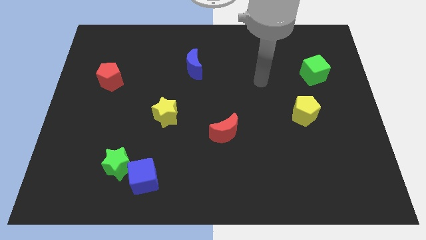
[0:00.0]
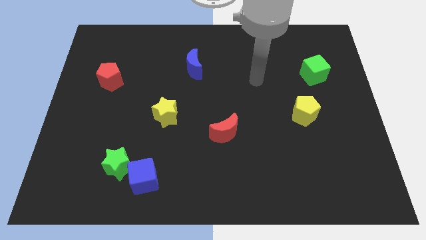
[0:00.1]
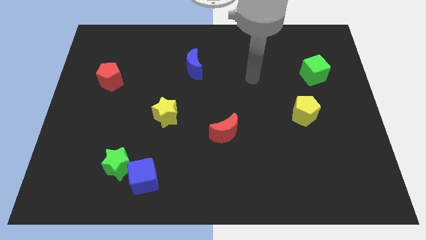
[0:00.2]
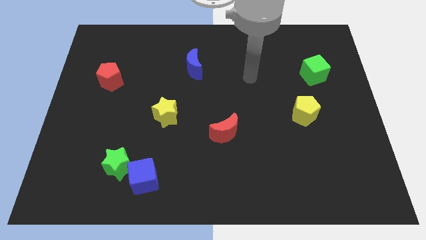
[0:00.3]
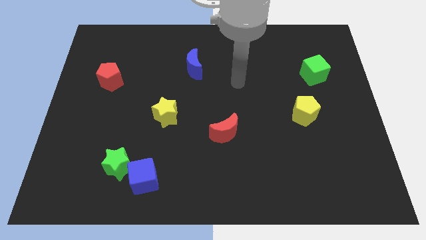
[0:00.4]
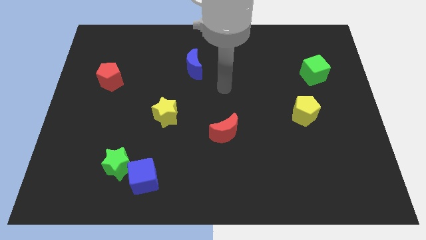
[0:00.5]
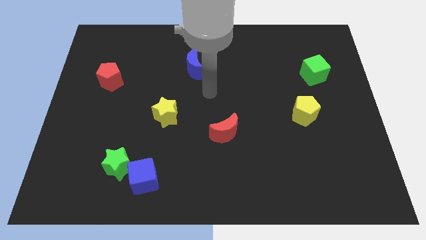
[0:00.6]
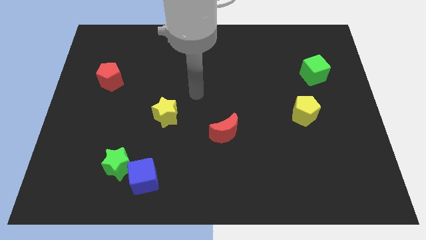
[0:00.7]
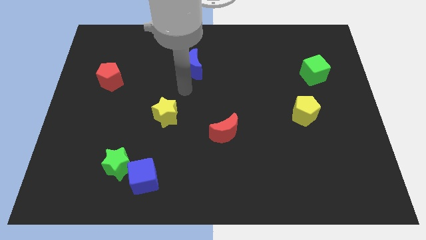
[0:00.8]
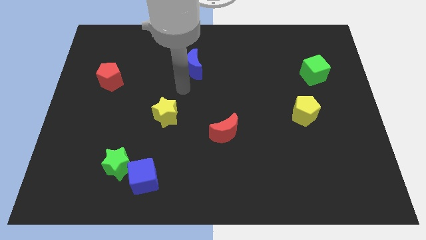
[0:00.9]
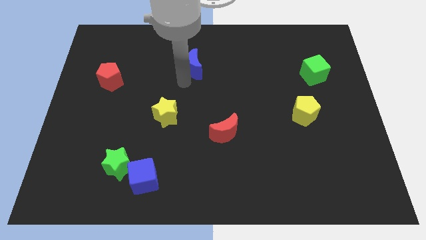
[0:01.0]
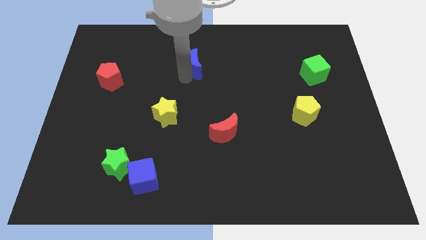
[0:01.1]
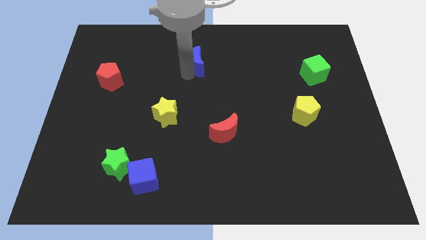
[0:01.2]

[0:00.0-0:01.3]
touch the blue moon

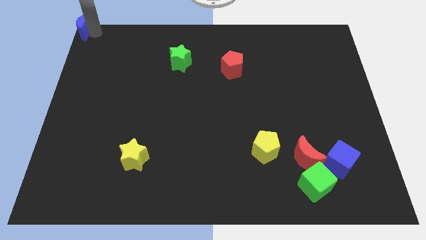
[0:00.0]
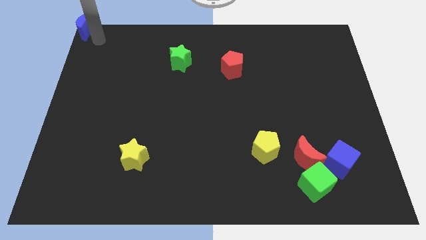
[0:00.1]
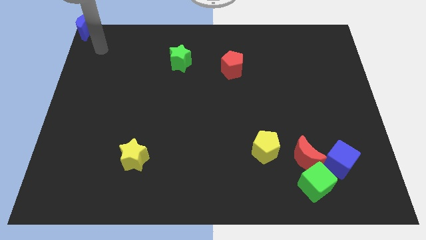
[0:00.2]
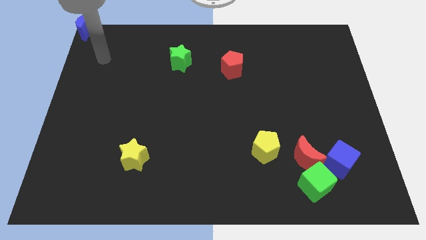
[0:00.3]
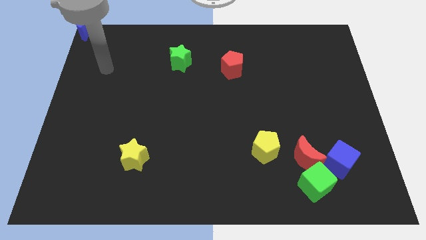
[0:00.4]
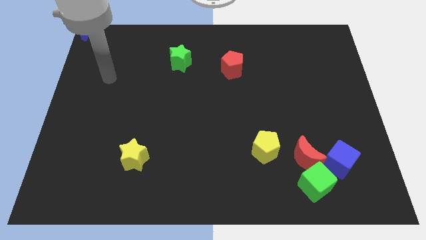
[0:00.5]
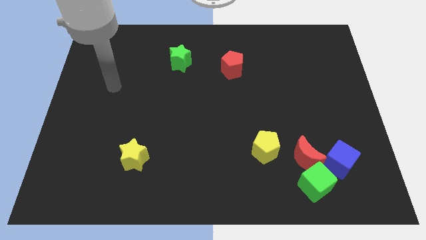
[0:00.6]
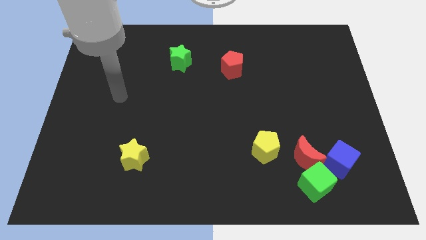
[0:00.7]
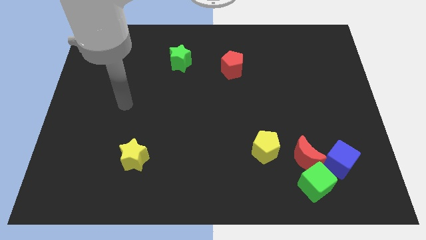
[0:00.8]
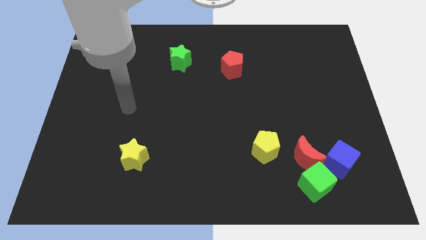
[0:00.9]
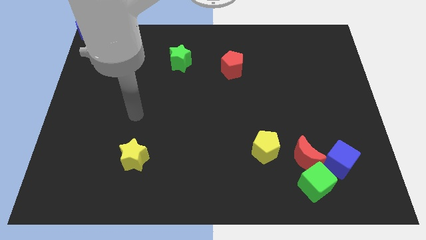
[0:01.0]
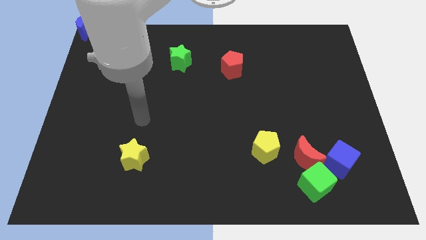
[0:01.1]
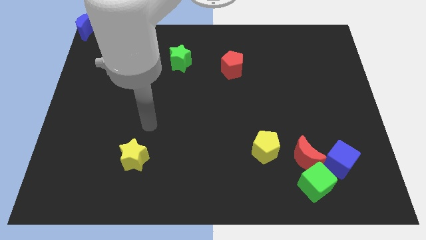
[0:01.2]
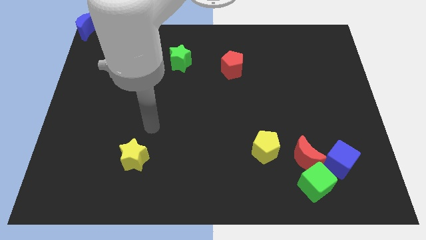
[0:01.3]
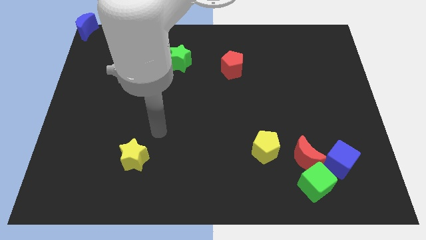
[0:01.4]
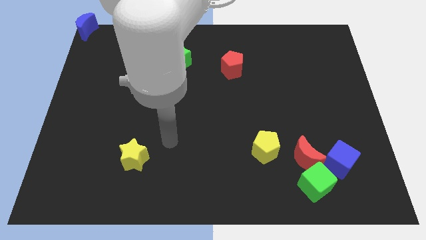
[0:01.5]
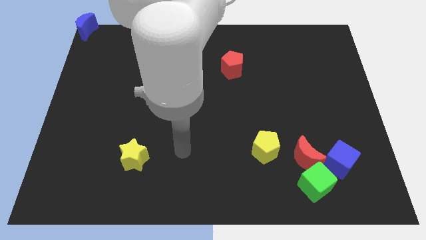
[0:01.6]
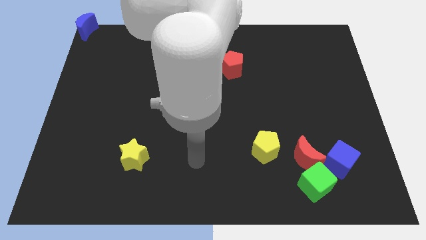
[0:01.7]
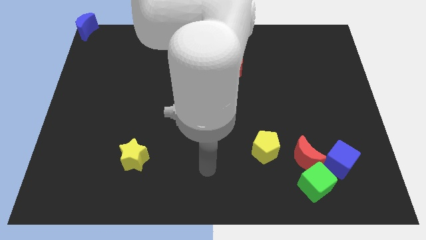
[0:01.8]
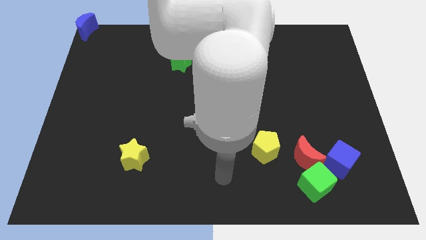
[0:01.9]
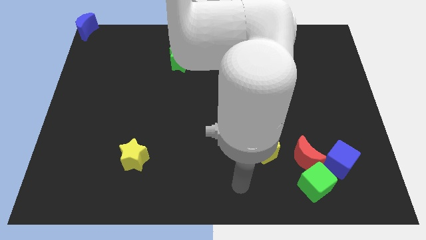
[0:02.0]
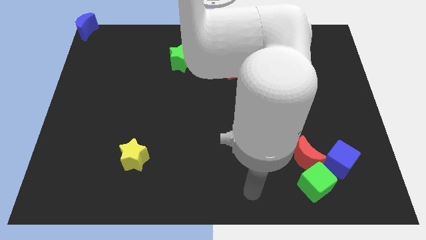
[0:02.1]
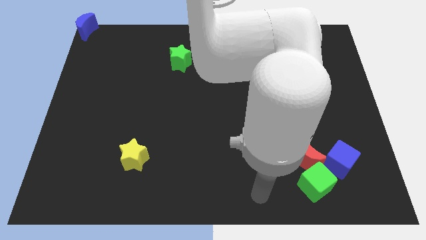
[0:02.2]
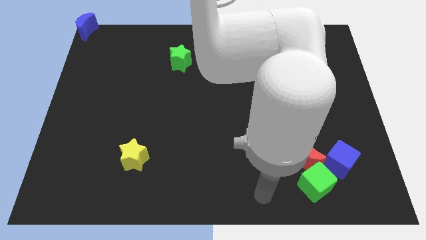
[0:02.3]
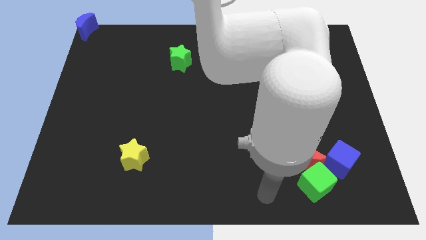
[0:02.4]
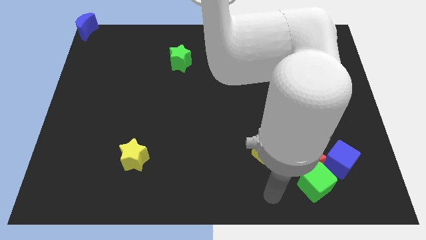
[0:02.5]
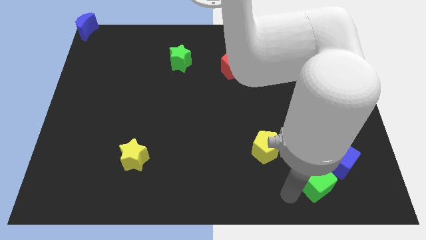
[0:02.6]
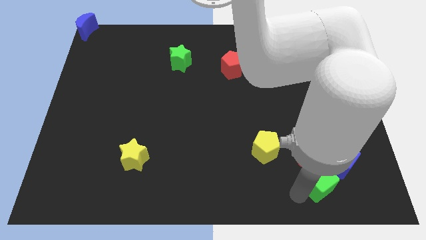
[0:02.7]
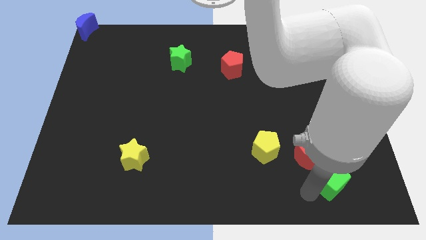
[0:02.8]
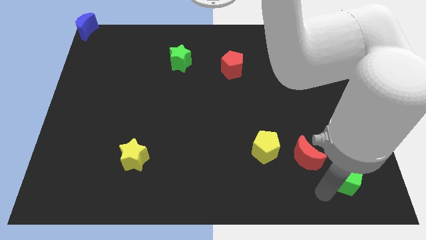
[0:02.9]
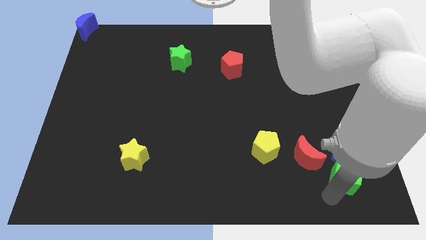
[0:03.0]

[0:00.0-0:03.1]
slide green cube into blue cube

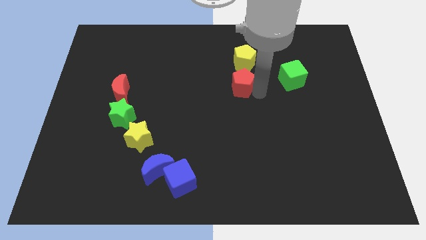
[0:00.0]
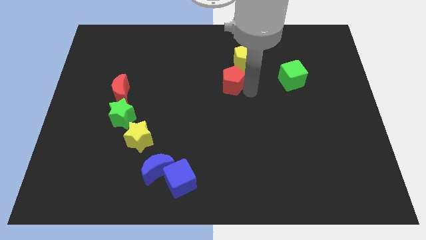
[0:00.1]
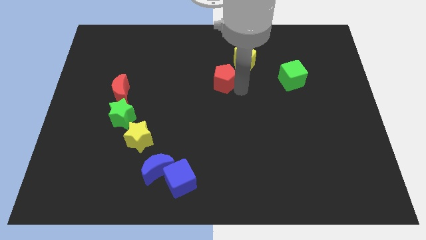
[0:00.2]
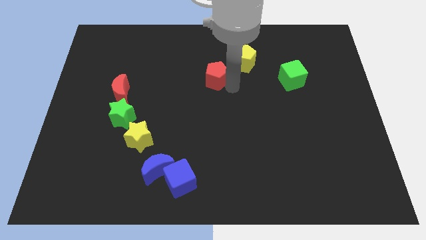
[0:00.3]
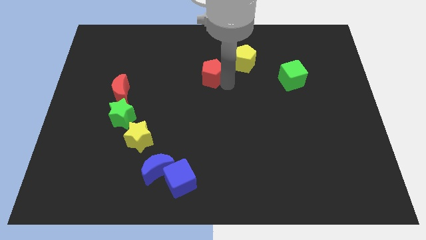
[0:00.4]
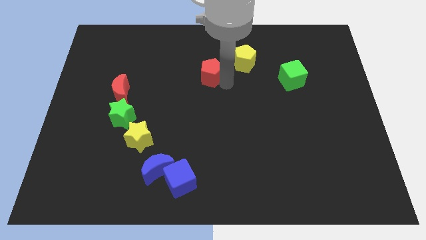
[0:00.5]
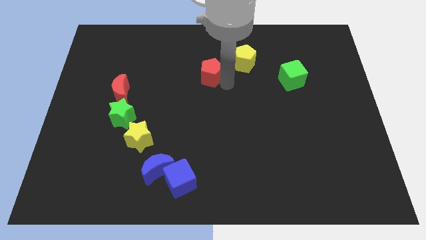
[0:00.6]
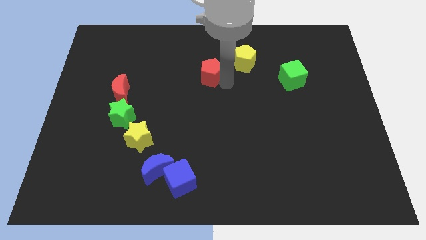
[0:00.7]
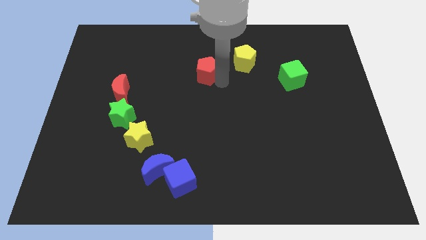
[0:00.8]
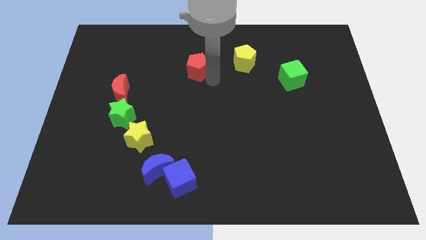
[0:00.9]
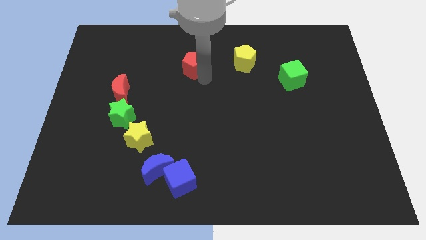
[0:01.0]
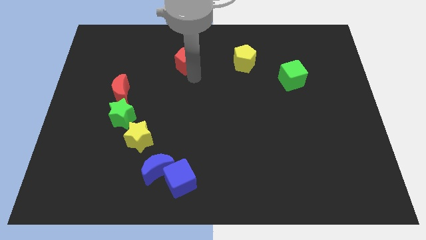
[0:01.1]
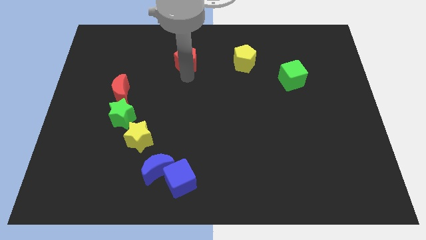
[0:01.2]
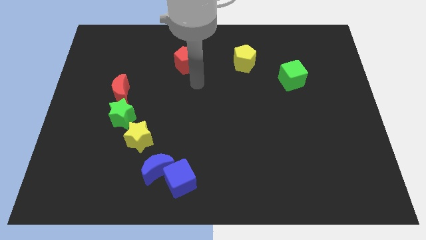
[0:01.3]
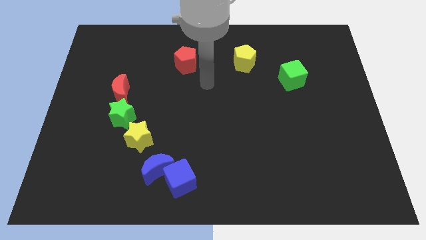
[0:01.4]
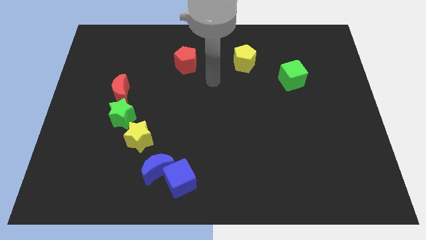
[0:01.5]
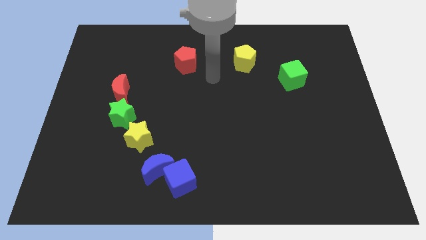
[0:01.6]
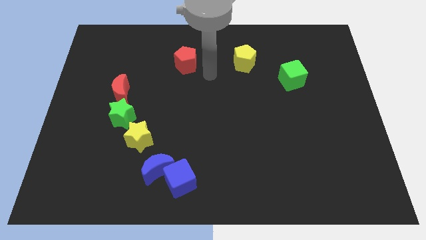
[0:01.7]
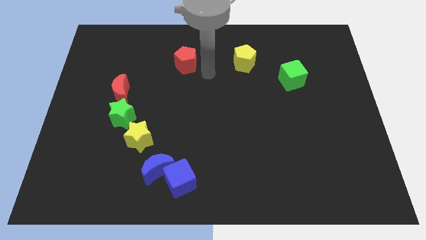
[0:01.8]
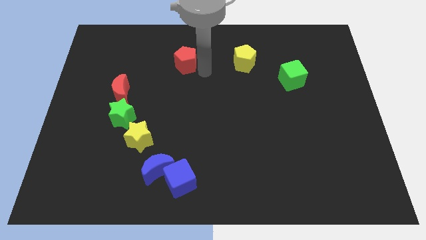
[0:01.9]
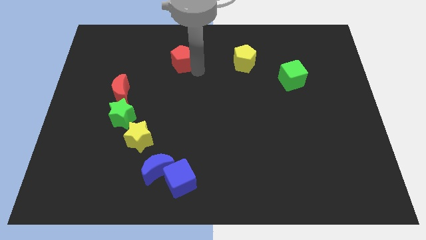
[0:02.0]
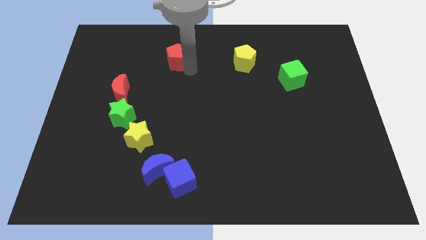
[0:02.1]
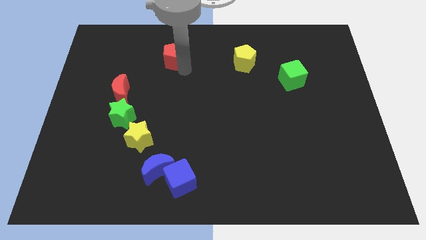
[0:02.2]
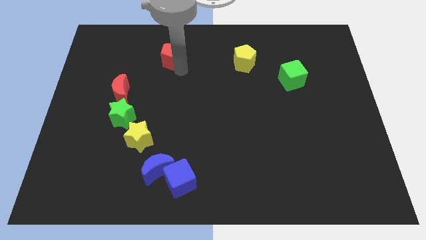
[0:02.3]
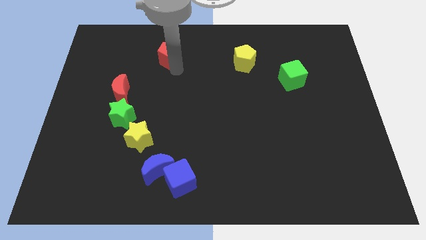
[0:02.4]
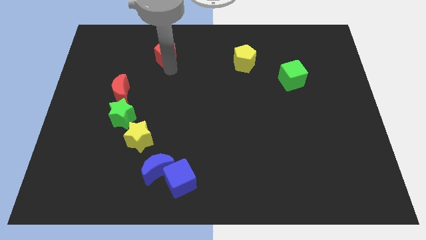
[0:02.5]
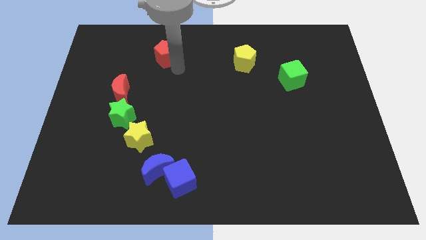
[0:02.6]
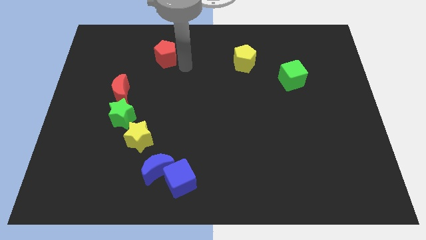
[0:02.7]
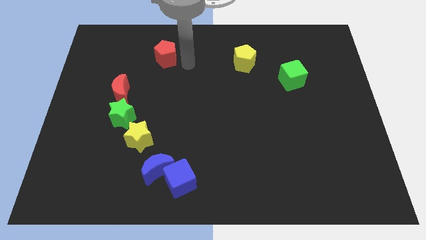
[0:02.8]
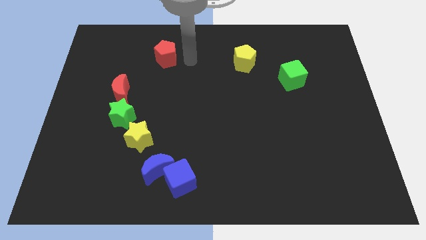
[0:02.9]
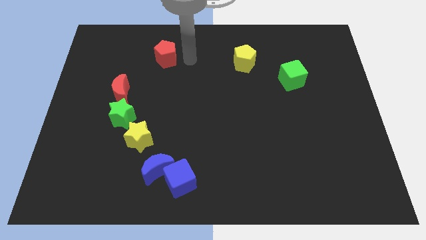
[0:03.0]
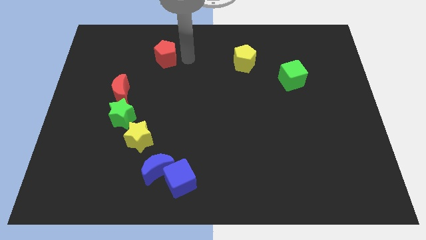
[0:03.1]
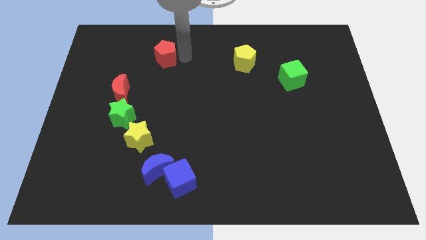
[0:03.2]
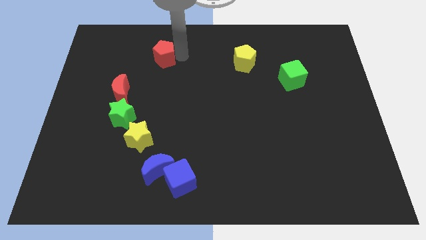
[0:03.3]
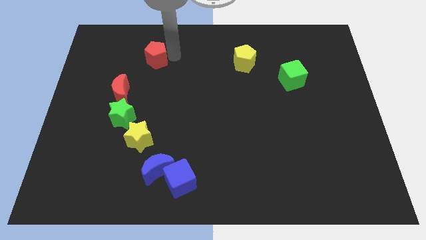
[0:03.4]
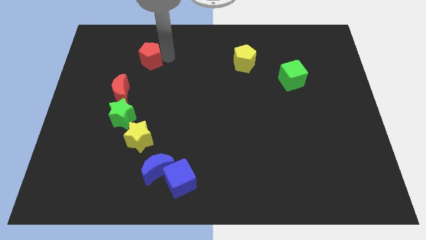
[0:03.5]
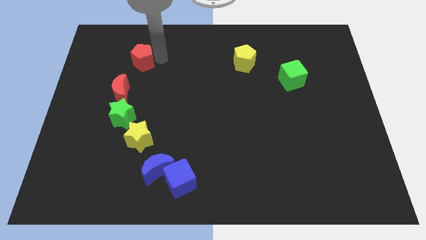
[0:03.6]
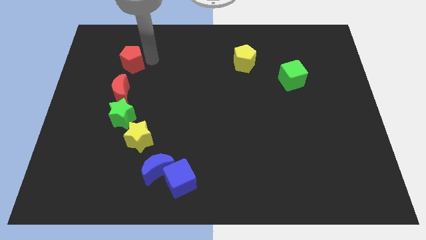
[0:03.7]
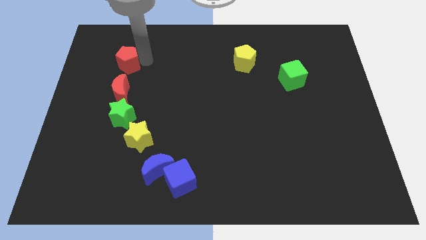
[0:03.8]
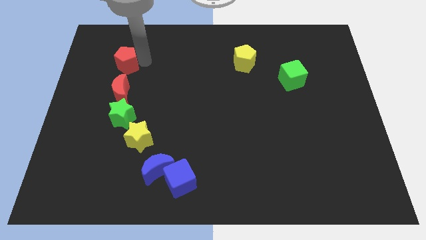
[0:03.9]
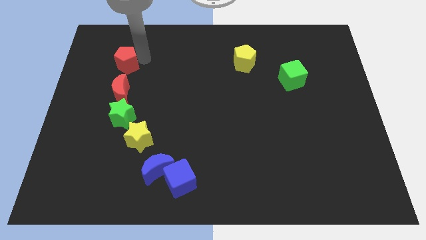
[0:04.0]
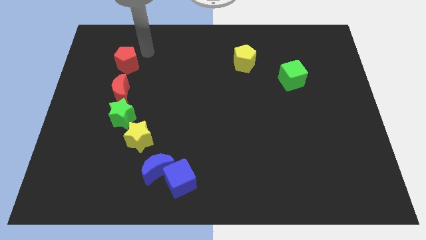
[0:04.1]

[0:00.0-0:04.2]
move the red pentagon to the top of the red crescent

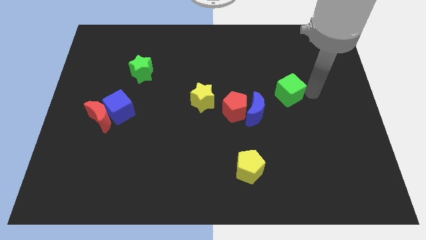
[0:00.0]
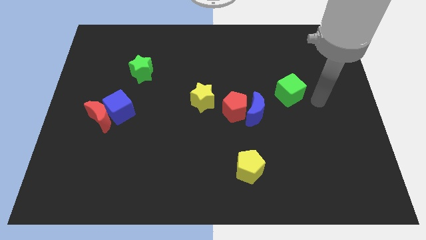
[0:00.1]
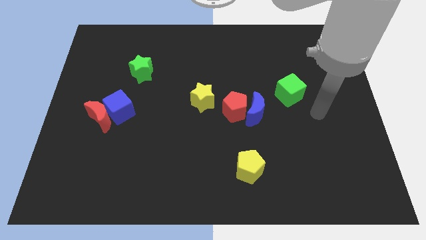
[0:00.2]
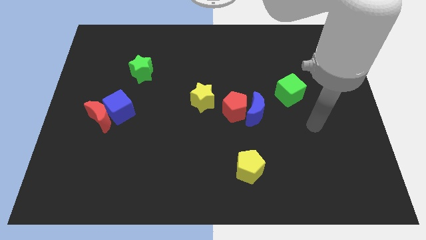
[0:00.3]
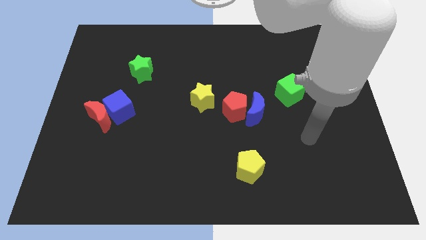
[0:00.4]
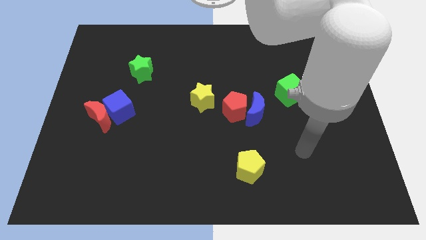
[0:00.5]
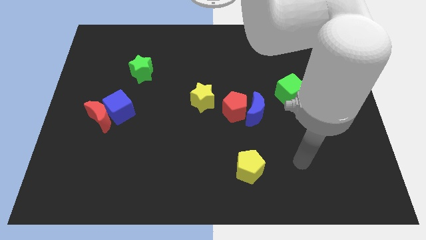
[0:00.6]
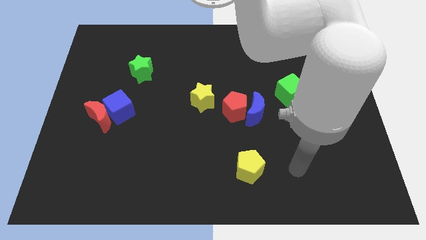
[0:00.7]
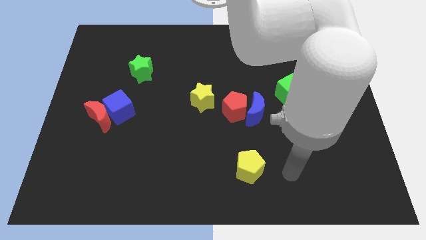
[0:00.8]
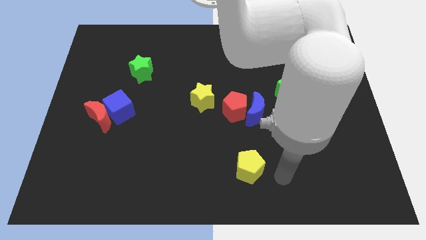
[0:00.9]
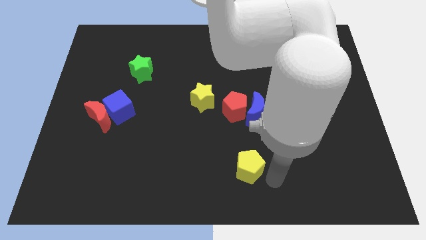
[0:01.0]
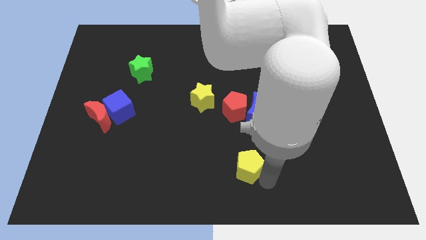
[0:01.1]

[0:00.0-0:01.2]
move your arm towards the yellow pentagon
